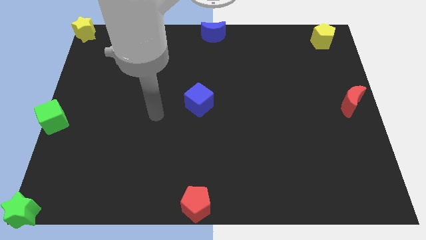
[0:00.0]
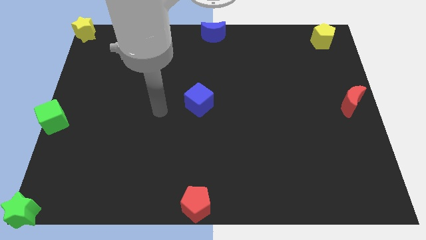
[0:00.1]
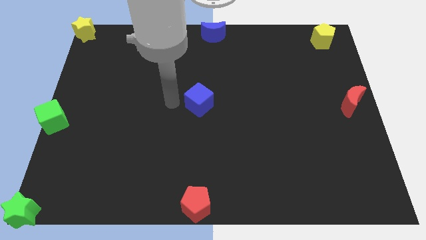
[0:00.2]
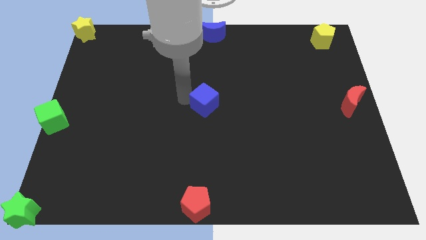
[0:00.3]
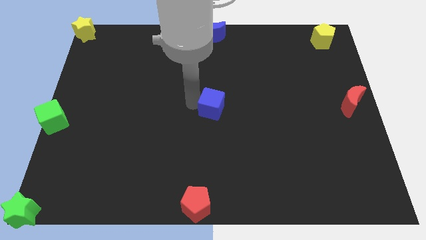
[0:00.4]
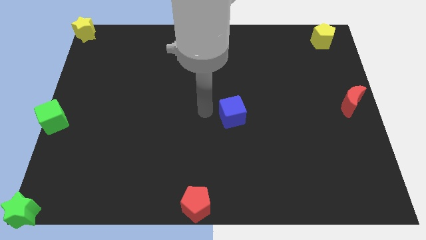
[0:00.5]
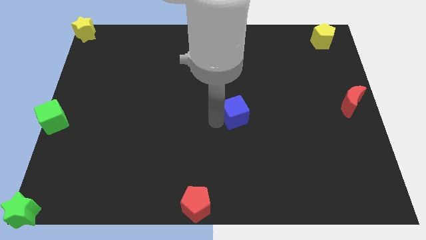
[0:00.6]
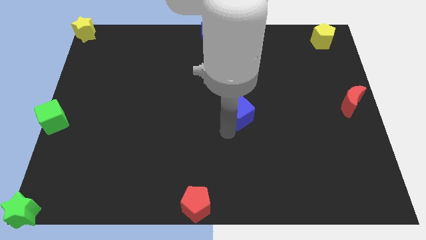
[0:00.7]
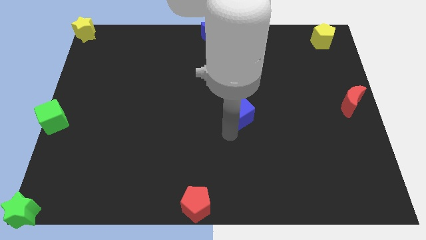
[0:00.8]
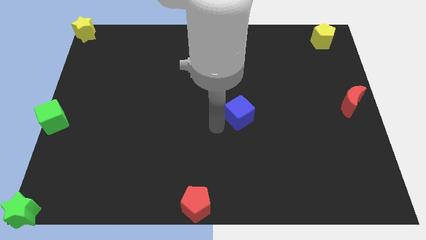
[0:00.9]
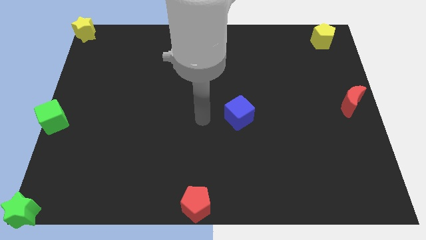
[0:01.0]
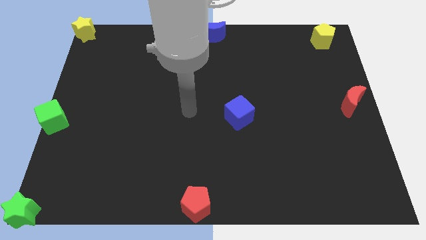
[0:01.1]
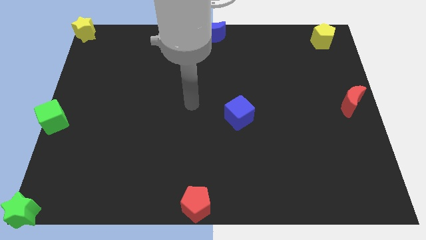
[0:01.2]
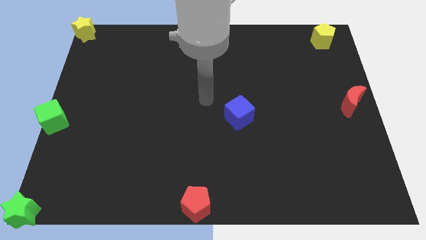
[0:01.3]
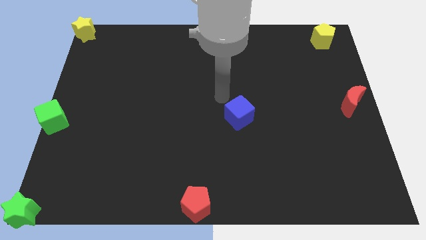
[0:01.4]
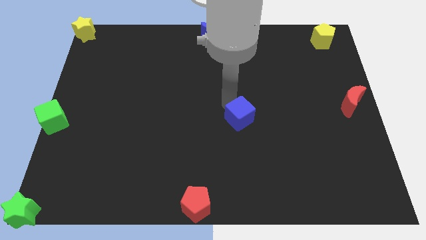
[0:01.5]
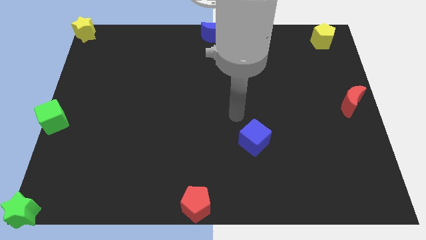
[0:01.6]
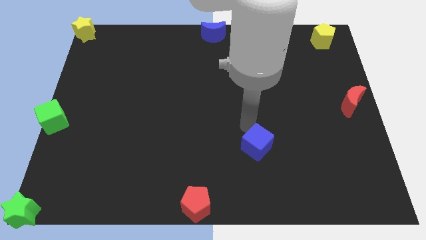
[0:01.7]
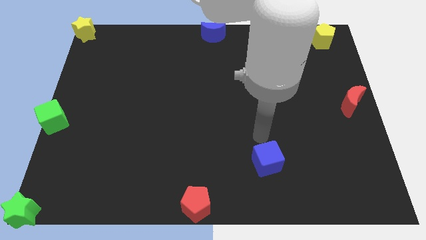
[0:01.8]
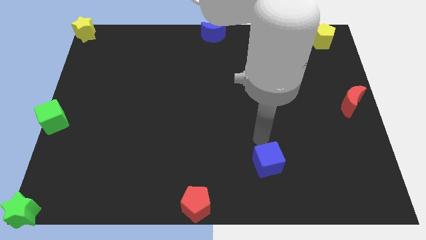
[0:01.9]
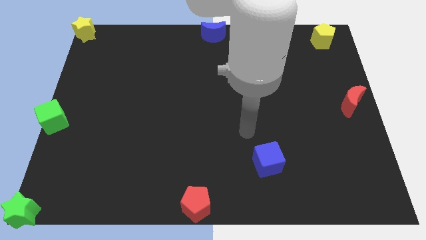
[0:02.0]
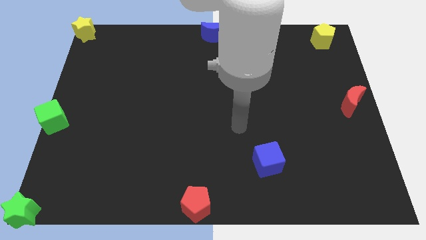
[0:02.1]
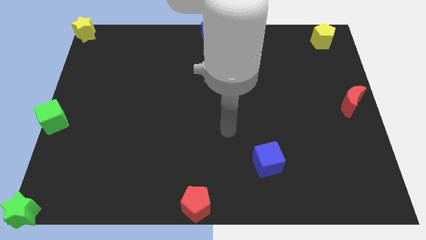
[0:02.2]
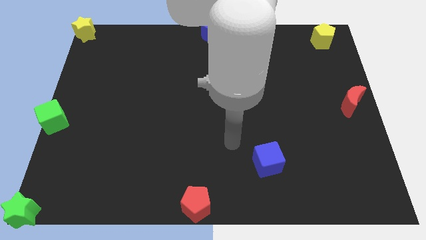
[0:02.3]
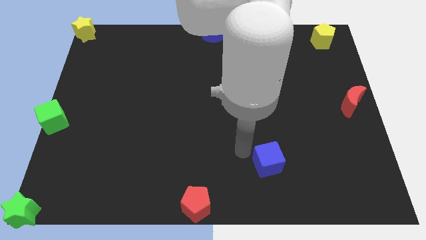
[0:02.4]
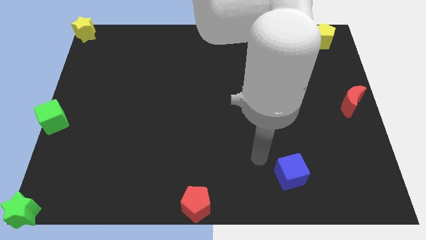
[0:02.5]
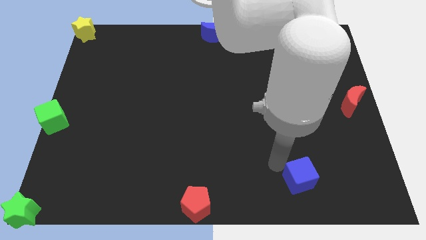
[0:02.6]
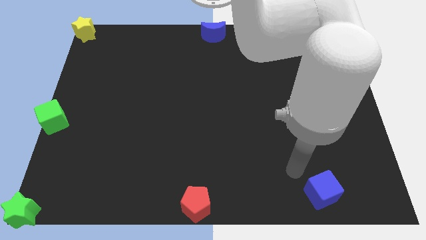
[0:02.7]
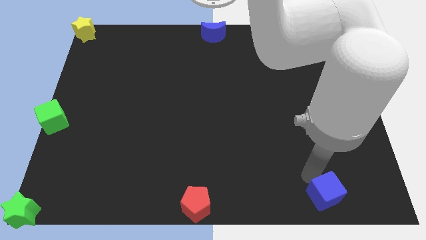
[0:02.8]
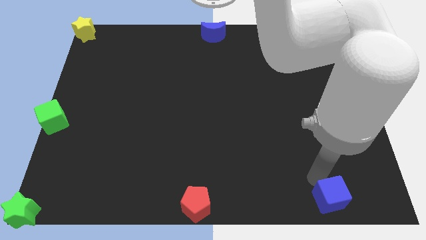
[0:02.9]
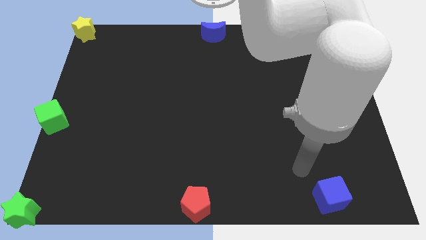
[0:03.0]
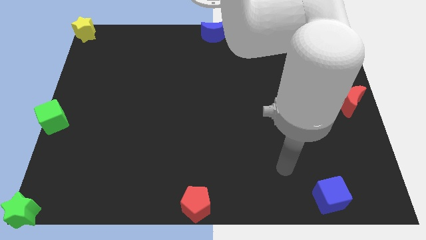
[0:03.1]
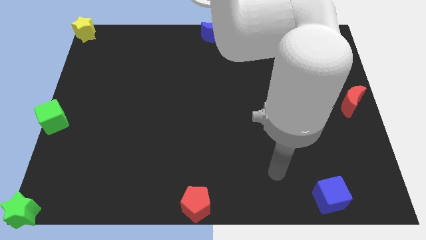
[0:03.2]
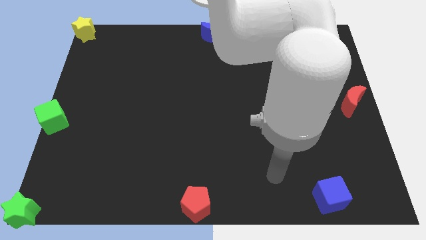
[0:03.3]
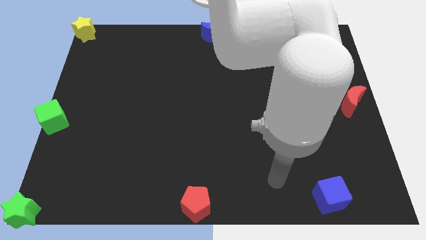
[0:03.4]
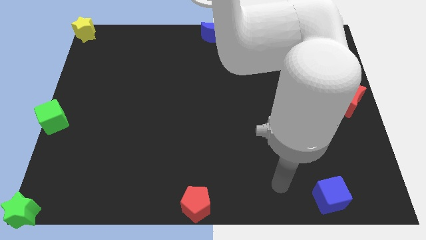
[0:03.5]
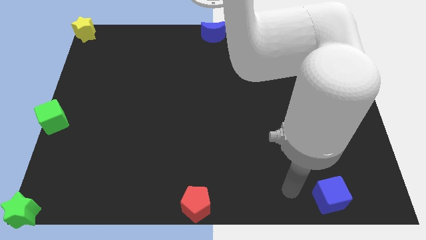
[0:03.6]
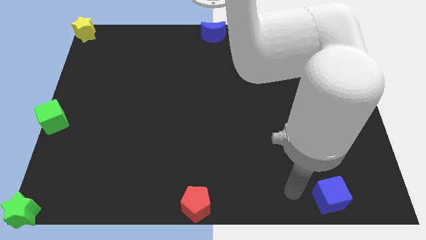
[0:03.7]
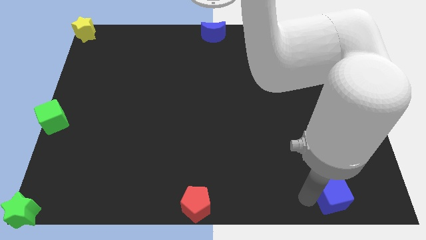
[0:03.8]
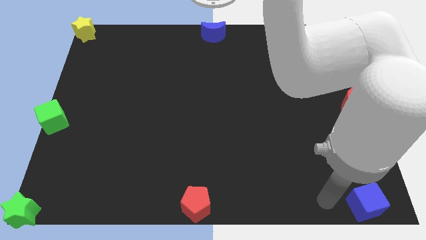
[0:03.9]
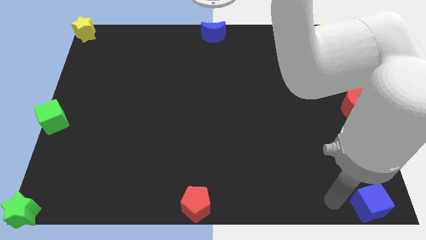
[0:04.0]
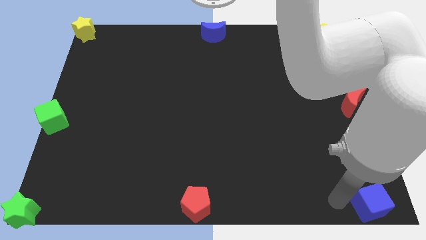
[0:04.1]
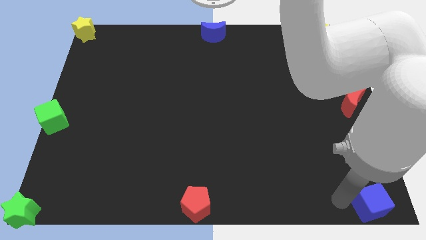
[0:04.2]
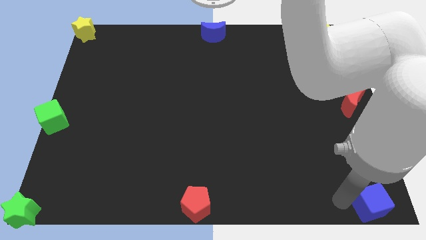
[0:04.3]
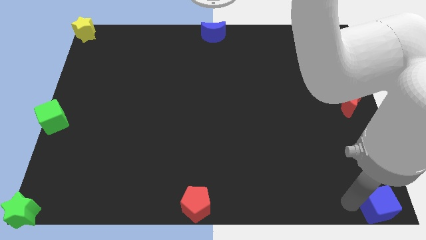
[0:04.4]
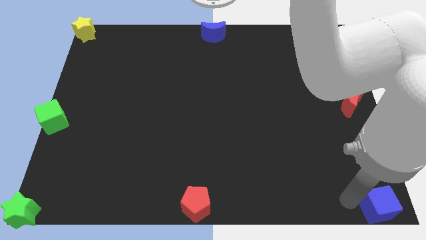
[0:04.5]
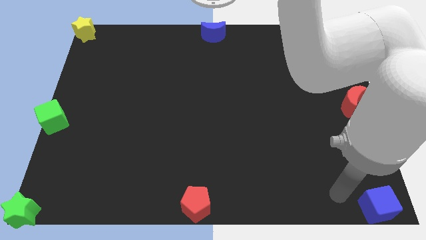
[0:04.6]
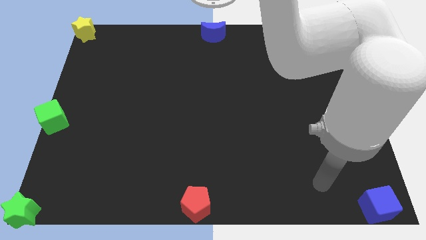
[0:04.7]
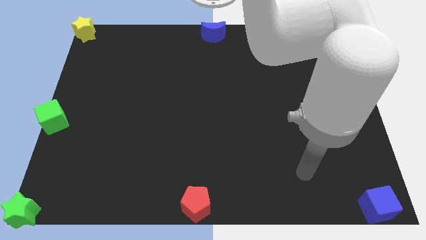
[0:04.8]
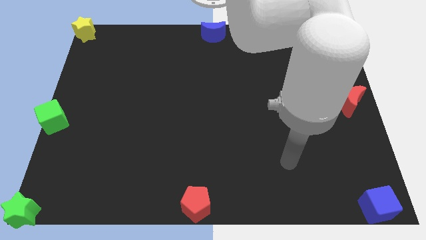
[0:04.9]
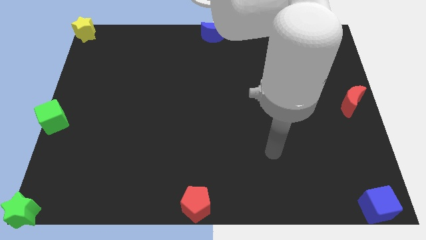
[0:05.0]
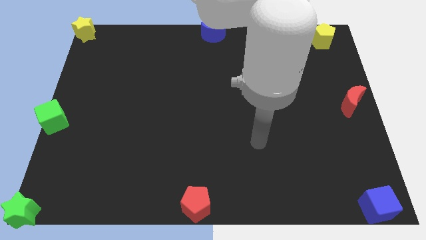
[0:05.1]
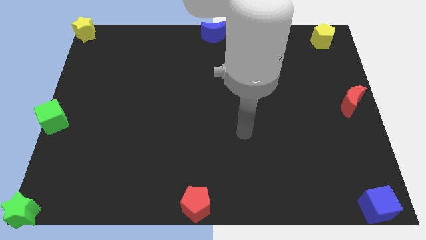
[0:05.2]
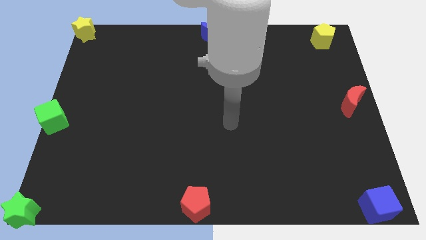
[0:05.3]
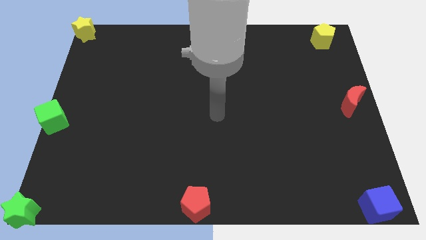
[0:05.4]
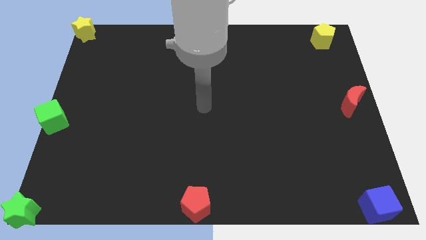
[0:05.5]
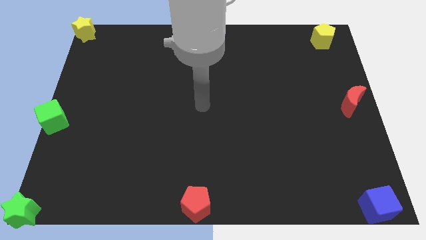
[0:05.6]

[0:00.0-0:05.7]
move blue cube to the bottom right

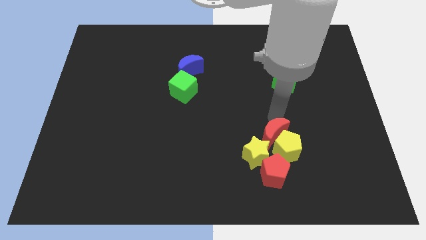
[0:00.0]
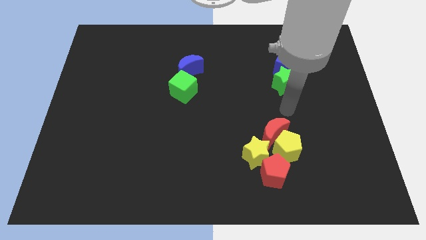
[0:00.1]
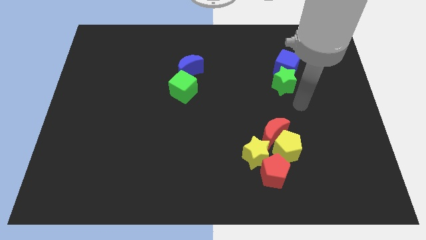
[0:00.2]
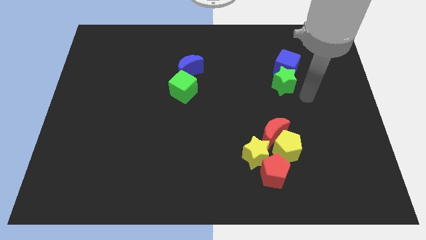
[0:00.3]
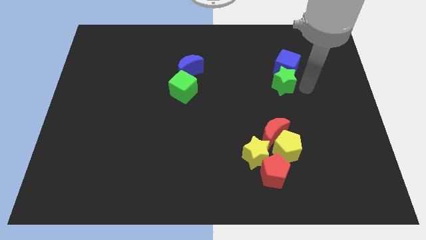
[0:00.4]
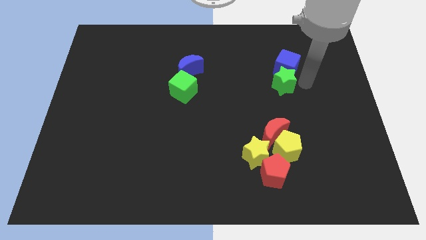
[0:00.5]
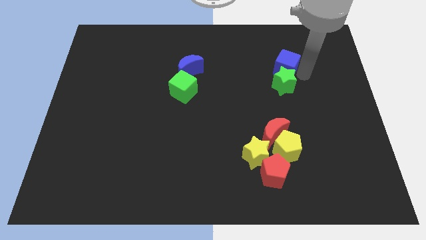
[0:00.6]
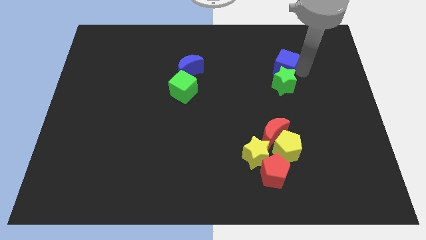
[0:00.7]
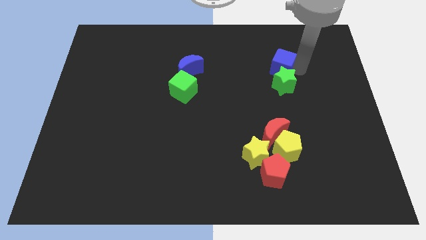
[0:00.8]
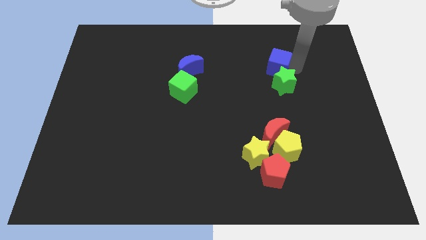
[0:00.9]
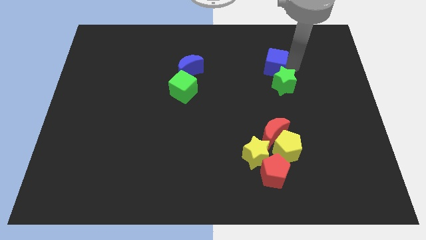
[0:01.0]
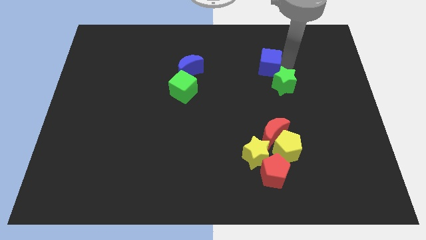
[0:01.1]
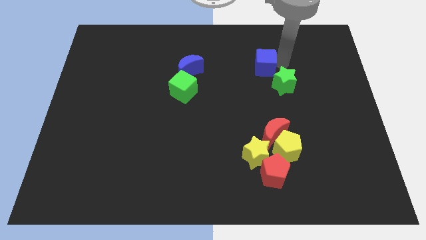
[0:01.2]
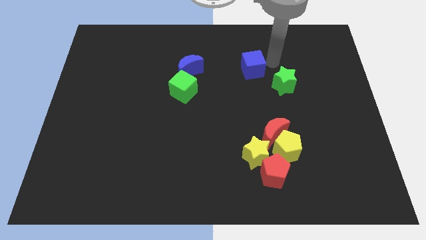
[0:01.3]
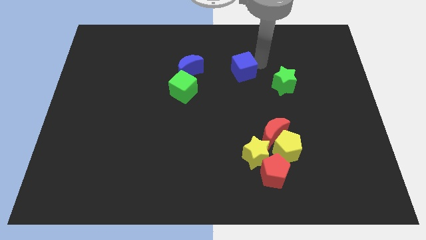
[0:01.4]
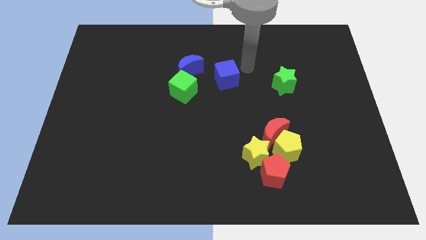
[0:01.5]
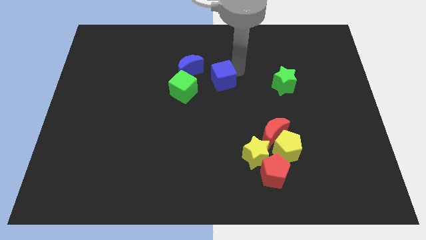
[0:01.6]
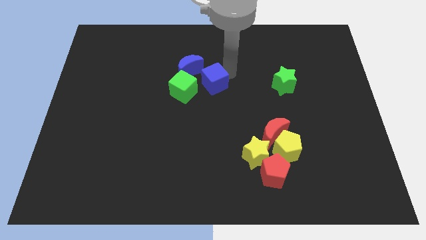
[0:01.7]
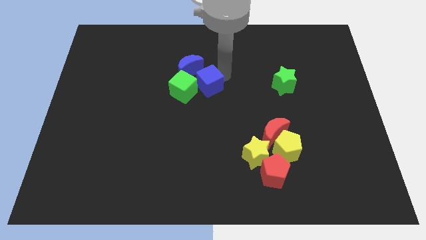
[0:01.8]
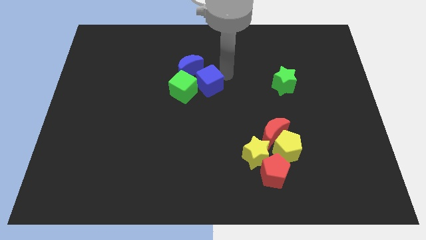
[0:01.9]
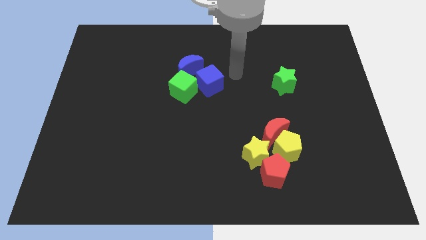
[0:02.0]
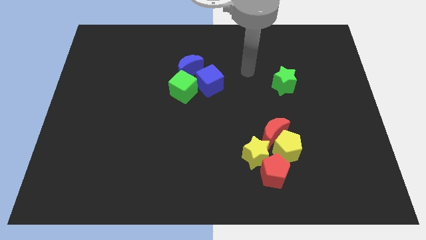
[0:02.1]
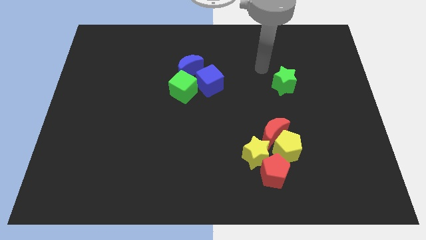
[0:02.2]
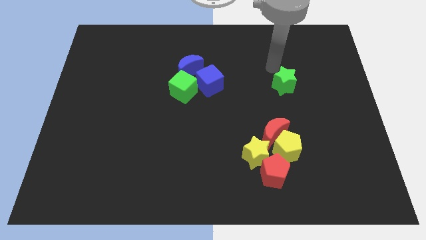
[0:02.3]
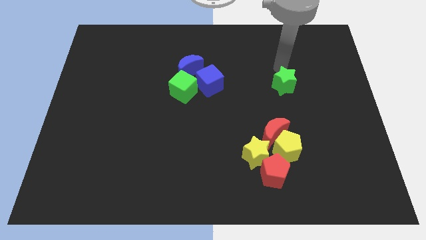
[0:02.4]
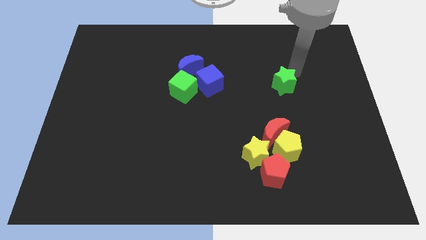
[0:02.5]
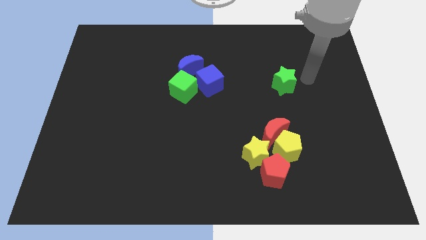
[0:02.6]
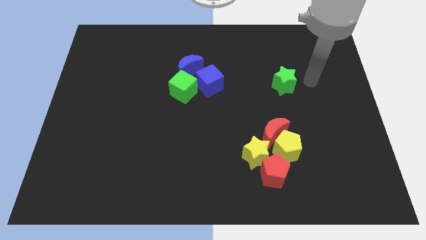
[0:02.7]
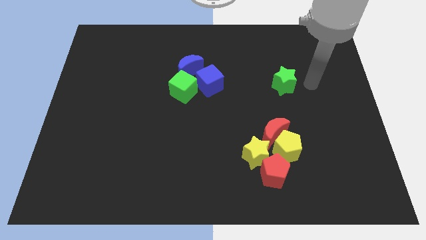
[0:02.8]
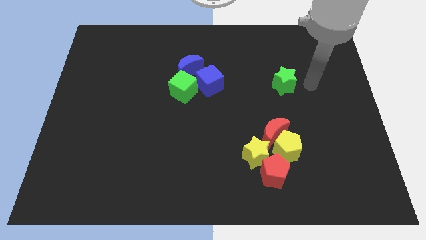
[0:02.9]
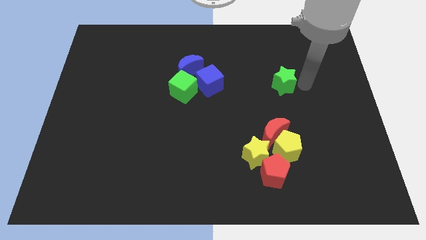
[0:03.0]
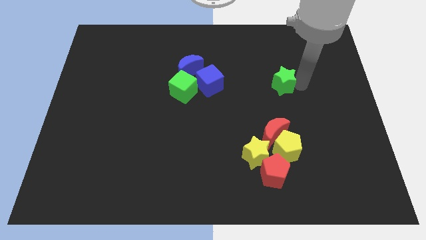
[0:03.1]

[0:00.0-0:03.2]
push the blue cube into the green cube
